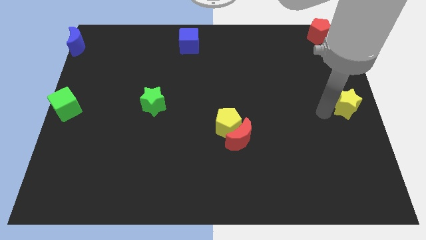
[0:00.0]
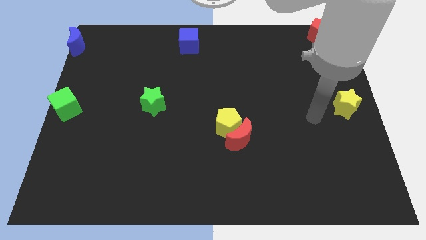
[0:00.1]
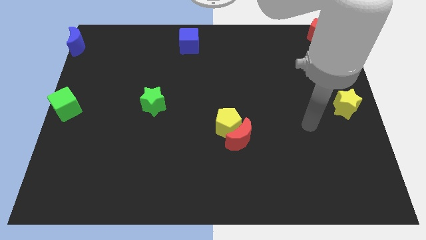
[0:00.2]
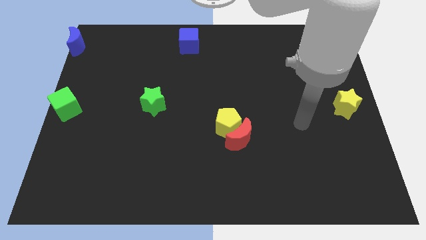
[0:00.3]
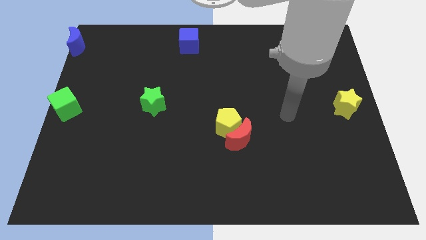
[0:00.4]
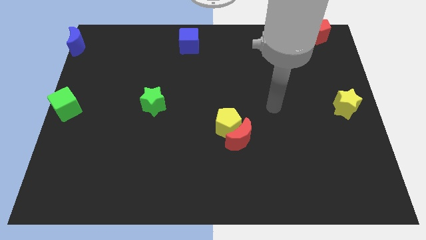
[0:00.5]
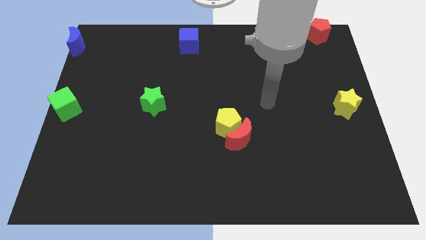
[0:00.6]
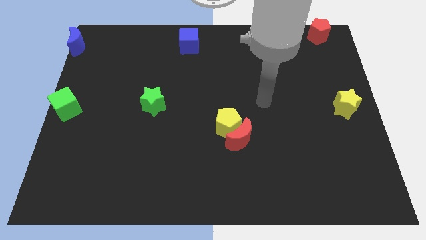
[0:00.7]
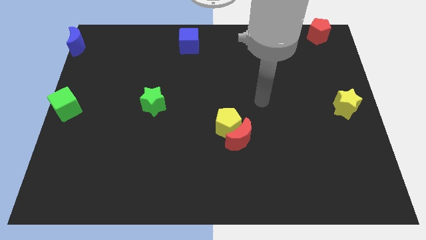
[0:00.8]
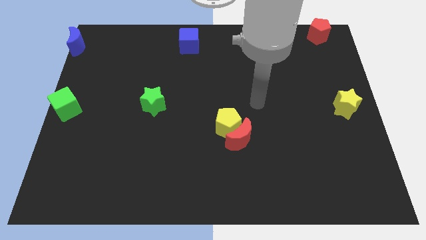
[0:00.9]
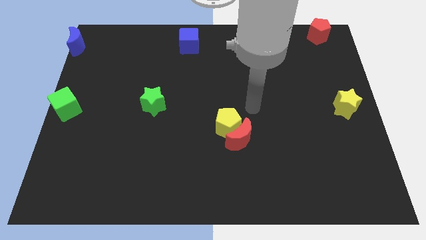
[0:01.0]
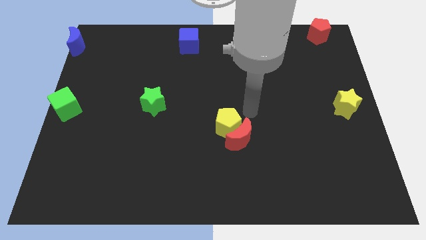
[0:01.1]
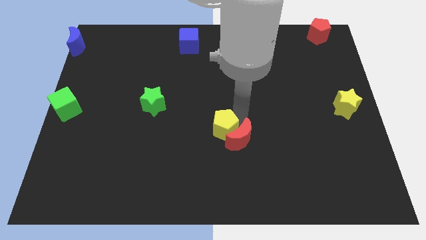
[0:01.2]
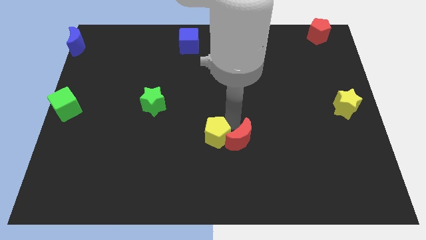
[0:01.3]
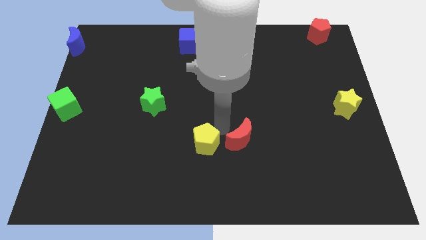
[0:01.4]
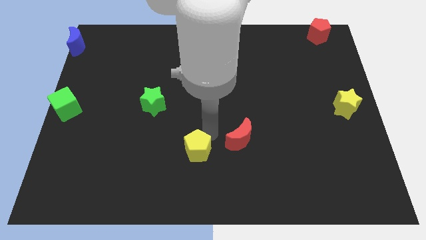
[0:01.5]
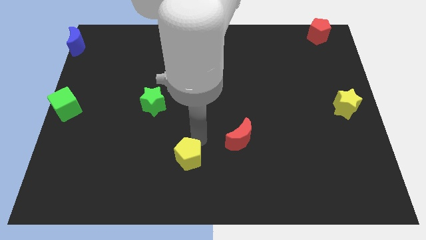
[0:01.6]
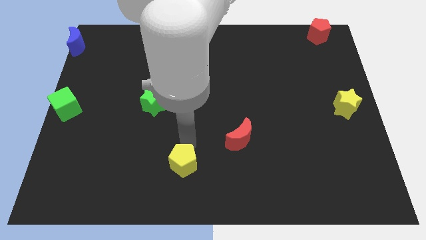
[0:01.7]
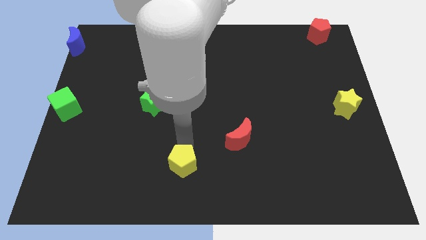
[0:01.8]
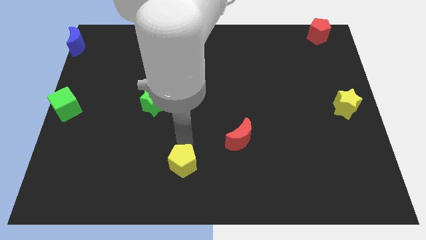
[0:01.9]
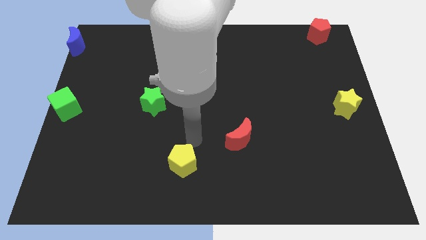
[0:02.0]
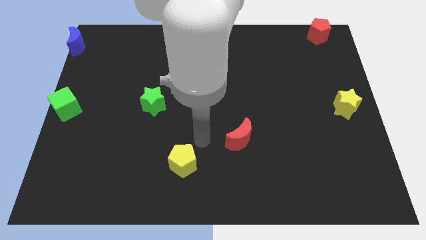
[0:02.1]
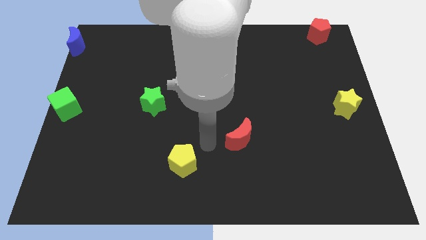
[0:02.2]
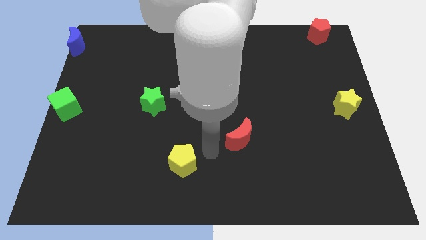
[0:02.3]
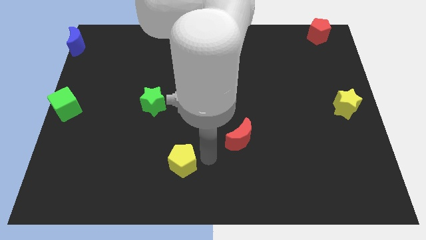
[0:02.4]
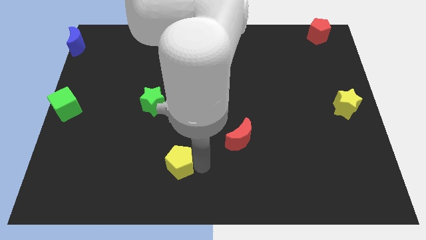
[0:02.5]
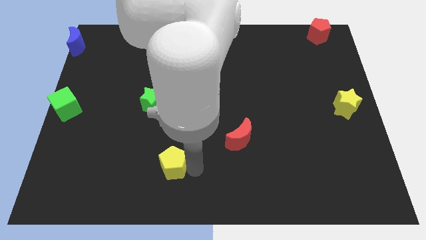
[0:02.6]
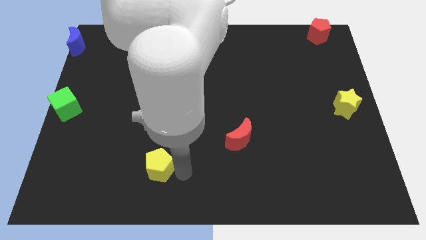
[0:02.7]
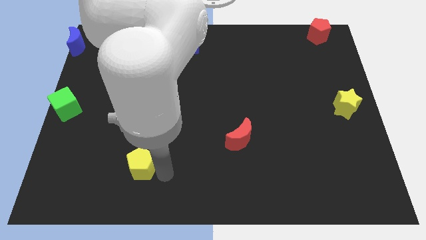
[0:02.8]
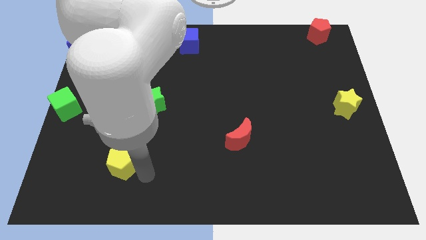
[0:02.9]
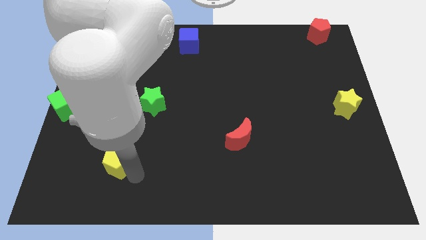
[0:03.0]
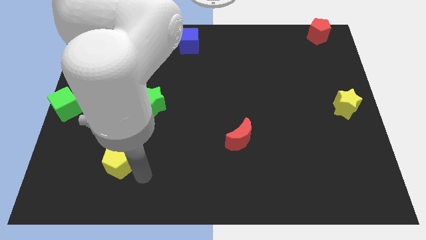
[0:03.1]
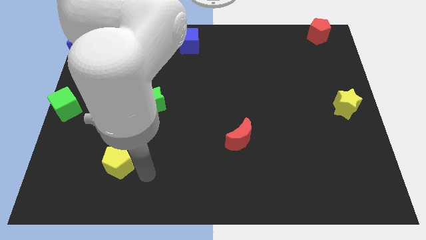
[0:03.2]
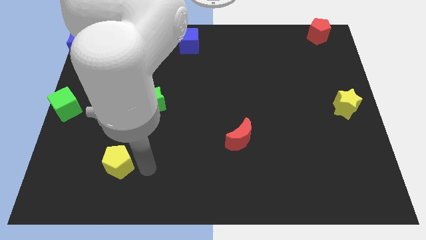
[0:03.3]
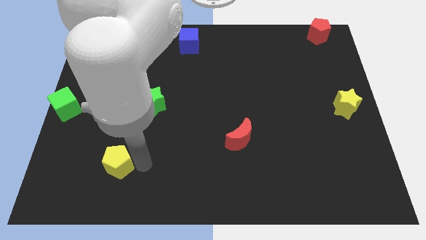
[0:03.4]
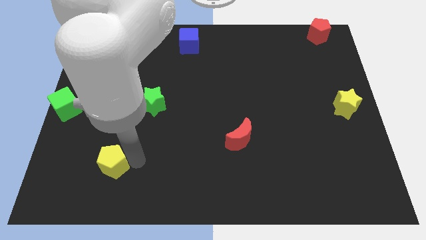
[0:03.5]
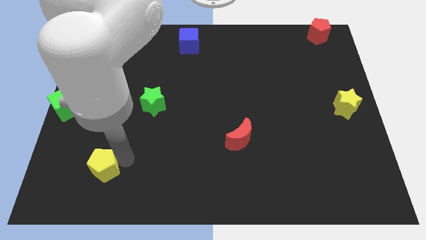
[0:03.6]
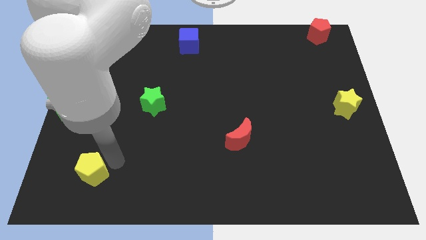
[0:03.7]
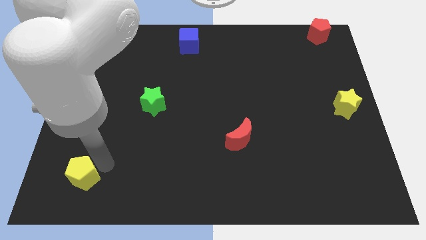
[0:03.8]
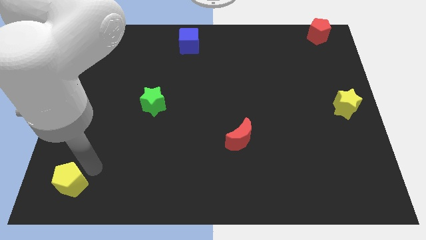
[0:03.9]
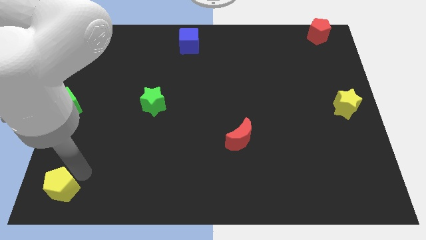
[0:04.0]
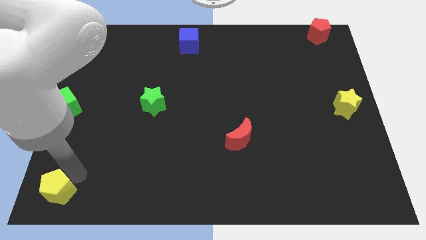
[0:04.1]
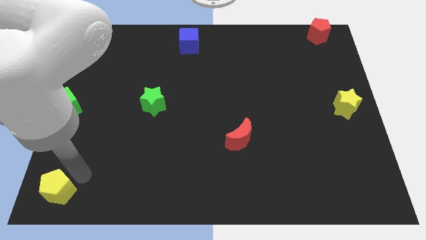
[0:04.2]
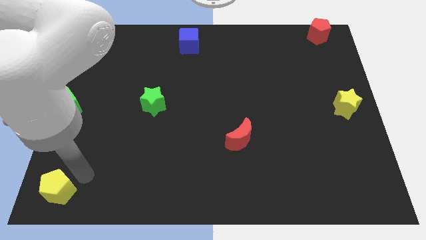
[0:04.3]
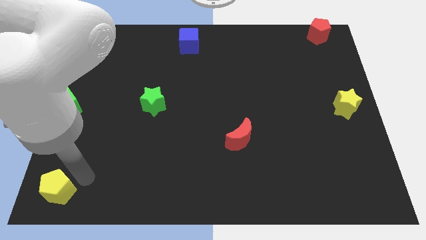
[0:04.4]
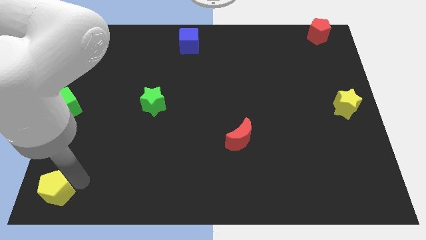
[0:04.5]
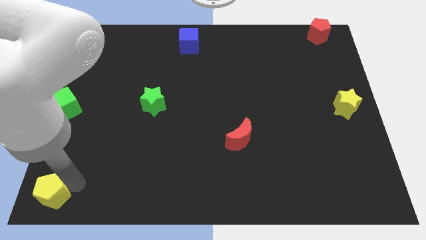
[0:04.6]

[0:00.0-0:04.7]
slide the yellow pentagon to the bottom left of the board

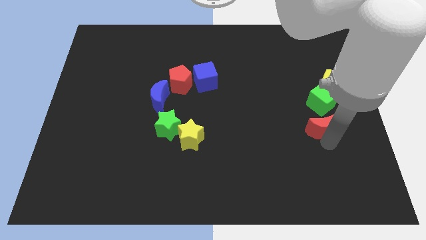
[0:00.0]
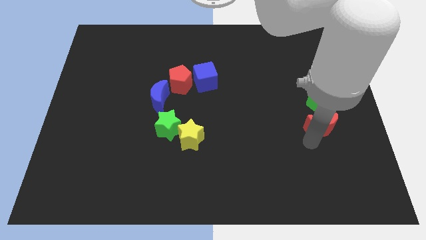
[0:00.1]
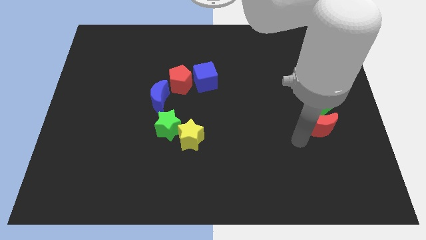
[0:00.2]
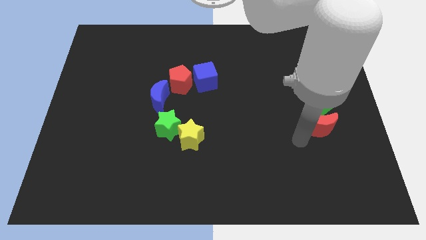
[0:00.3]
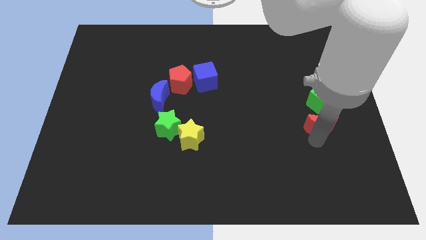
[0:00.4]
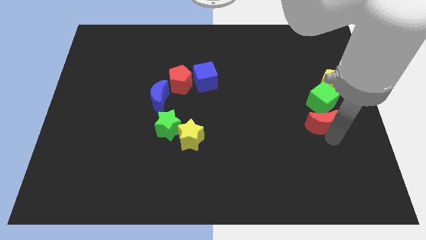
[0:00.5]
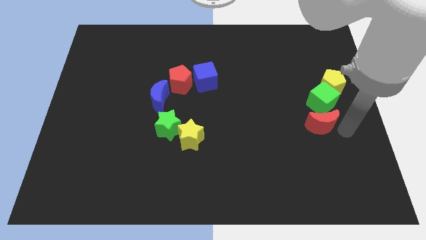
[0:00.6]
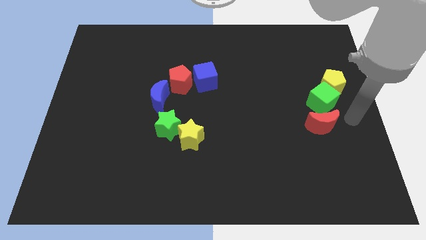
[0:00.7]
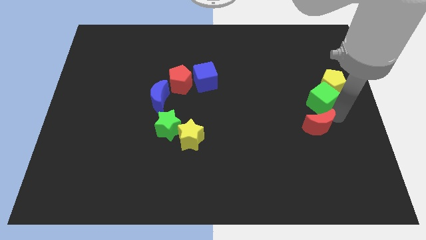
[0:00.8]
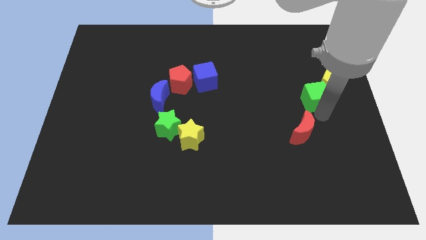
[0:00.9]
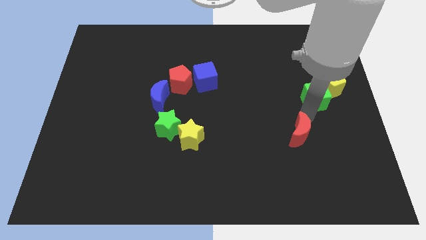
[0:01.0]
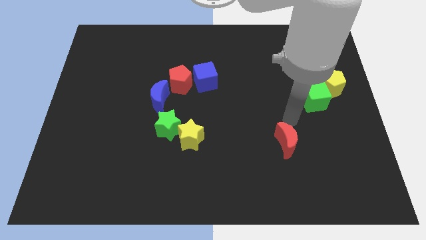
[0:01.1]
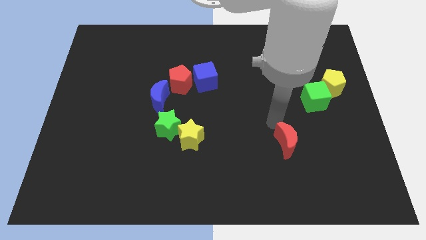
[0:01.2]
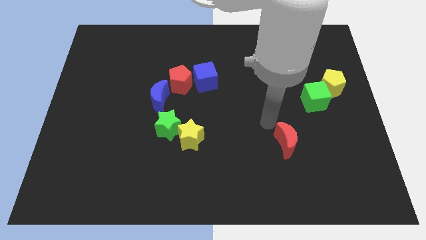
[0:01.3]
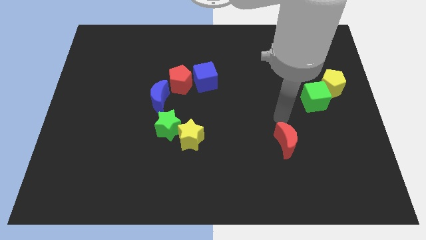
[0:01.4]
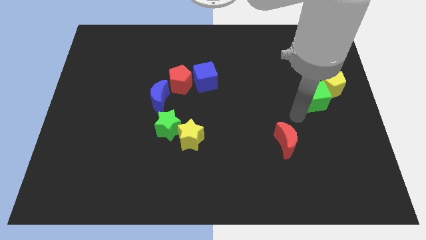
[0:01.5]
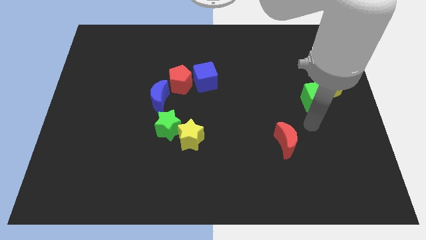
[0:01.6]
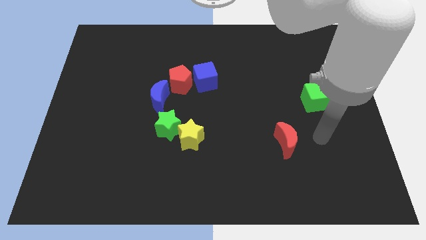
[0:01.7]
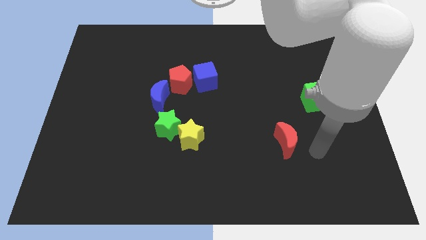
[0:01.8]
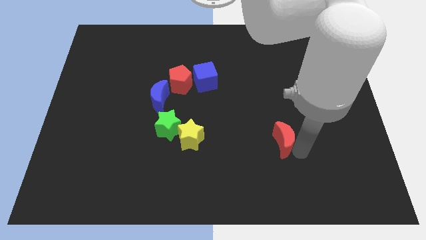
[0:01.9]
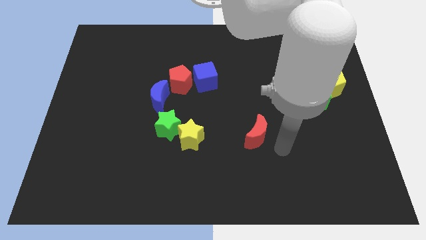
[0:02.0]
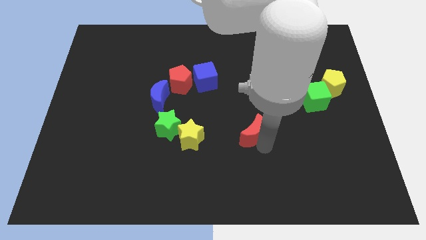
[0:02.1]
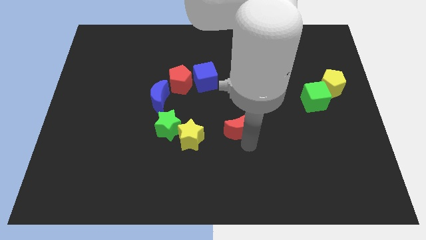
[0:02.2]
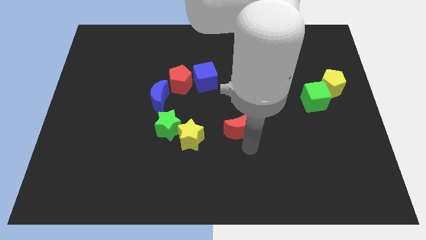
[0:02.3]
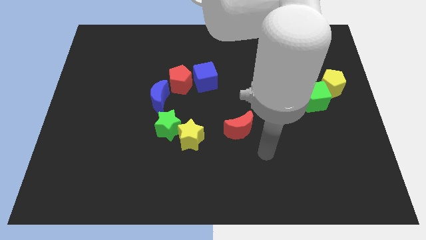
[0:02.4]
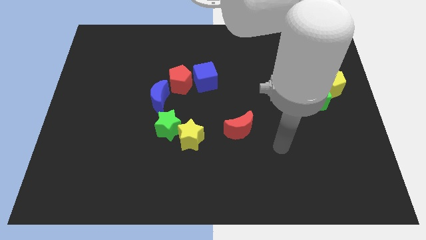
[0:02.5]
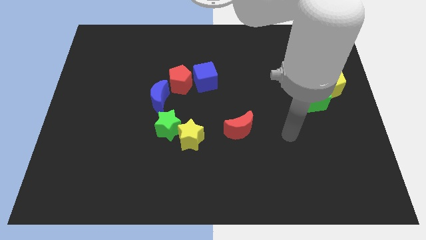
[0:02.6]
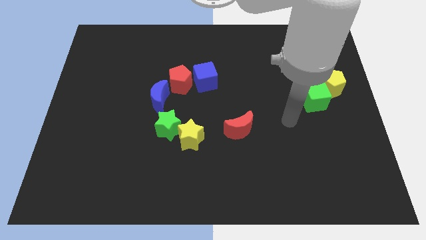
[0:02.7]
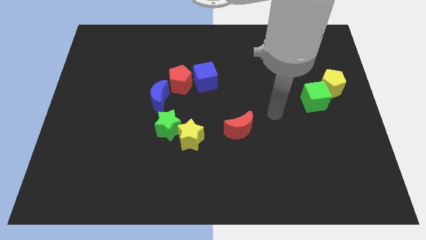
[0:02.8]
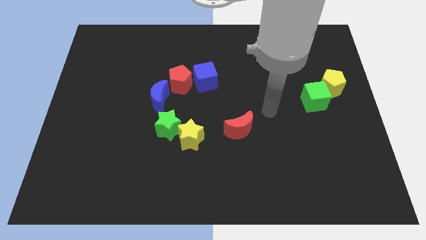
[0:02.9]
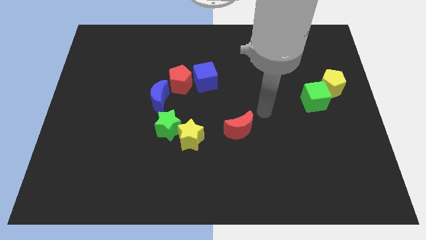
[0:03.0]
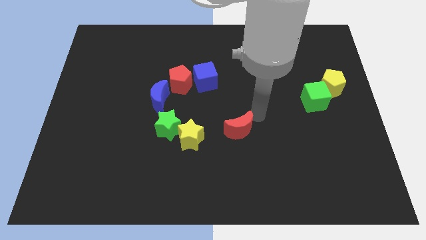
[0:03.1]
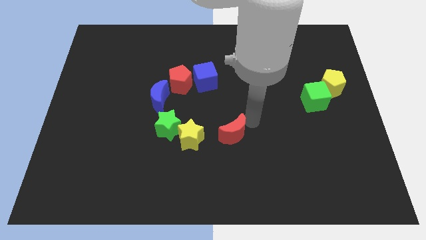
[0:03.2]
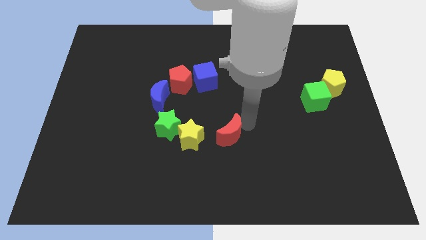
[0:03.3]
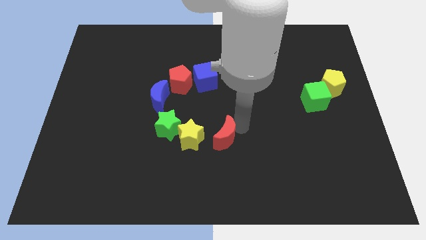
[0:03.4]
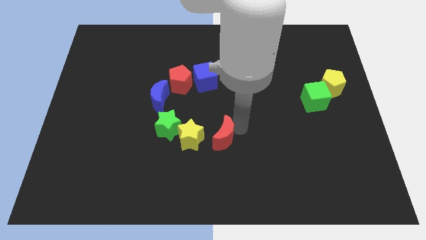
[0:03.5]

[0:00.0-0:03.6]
move the red crescent right to the yellow star

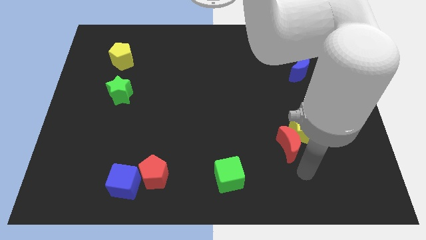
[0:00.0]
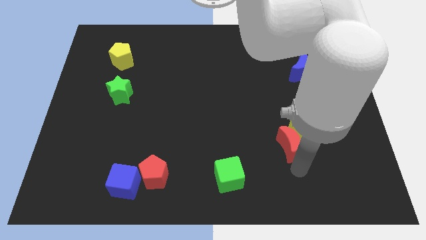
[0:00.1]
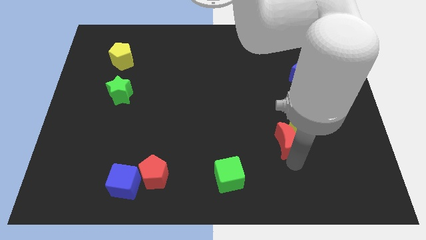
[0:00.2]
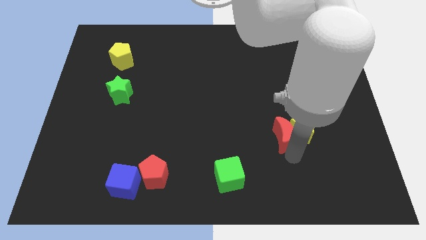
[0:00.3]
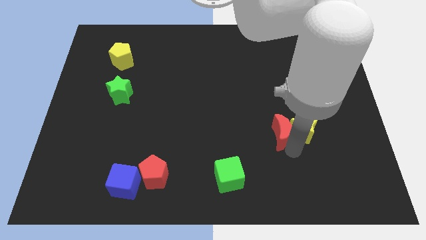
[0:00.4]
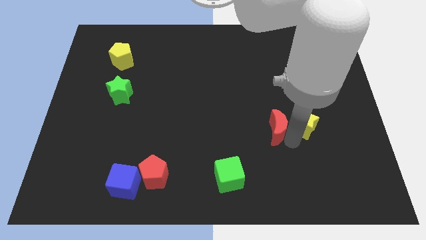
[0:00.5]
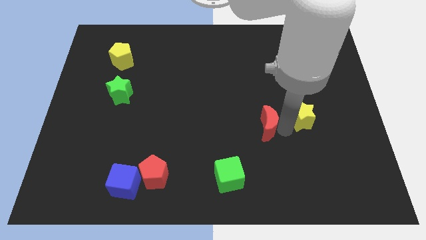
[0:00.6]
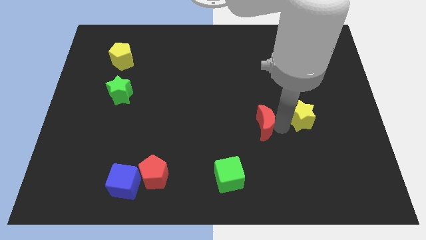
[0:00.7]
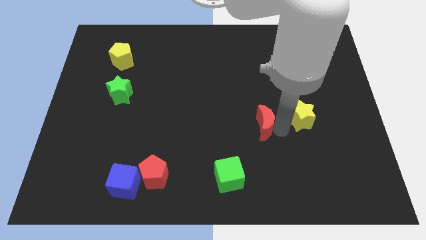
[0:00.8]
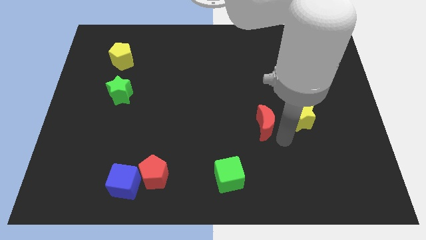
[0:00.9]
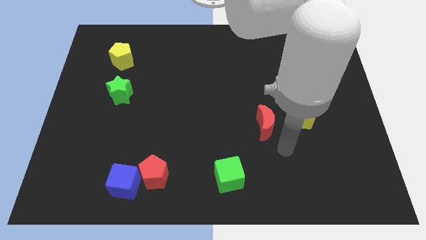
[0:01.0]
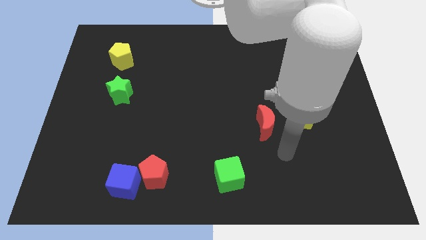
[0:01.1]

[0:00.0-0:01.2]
separate the red moon and yellow star
